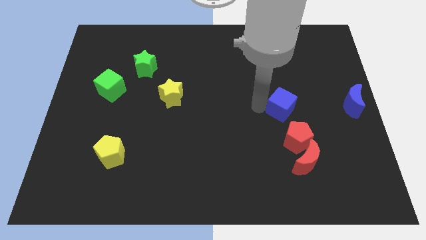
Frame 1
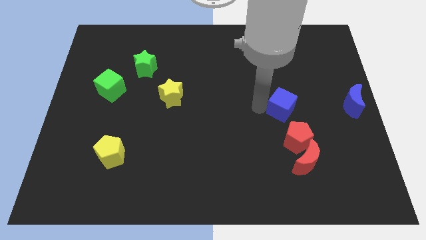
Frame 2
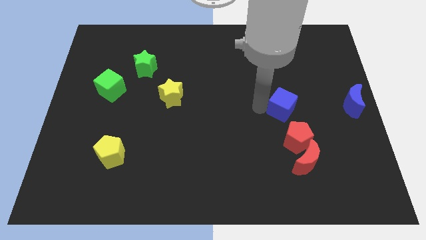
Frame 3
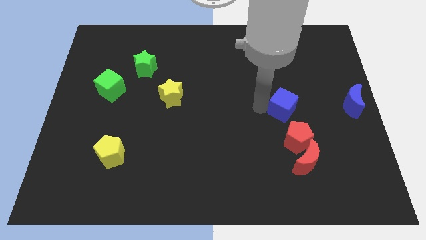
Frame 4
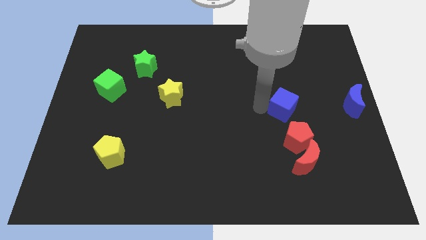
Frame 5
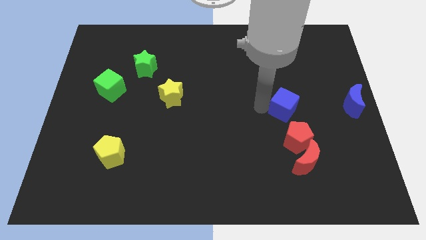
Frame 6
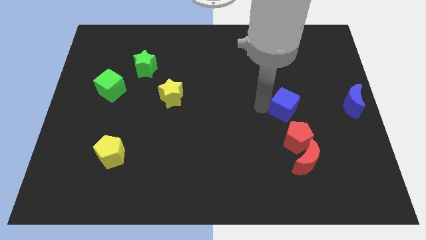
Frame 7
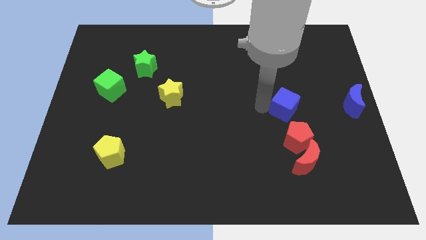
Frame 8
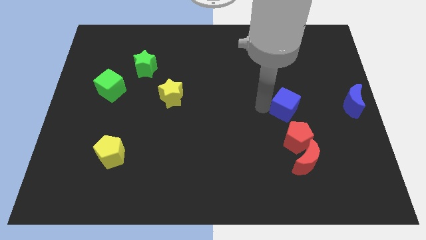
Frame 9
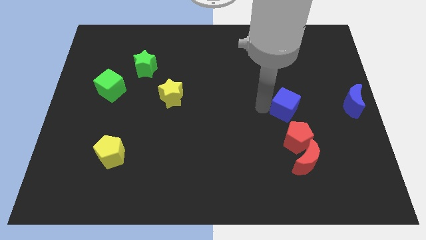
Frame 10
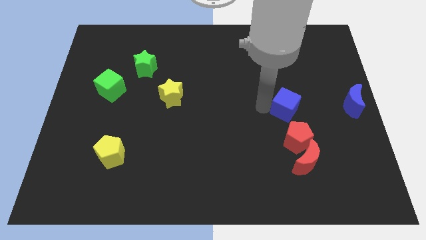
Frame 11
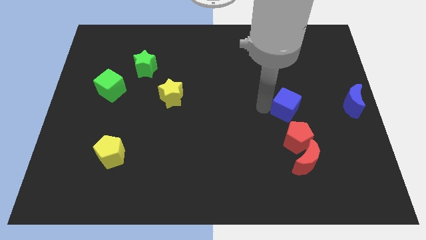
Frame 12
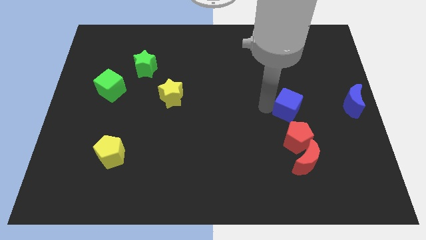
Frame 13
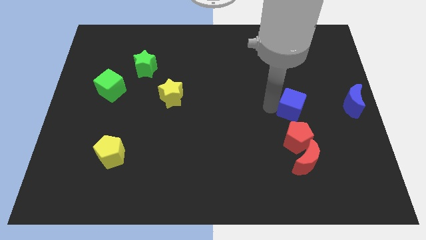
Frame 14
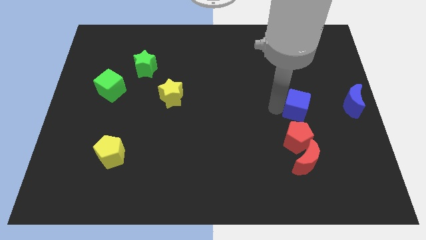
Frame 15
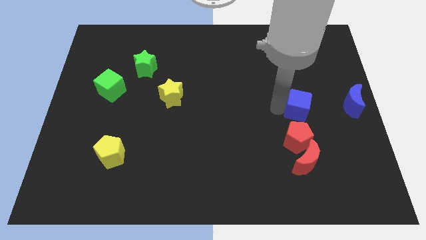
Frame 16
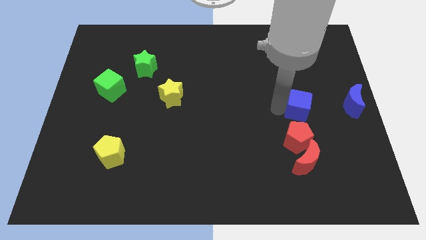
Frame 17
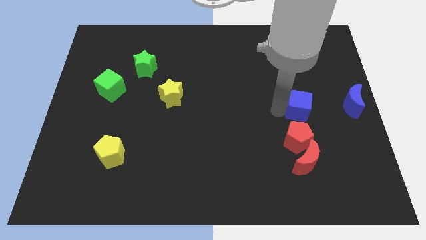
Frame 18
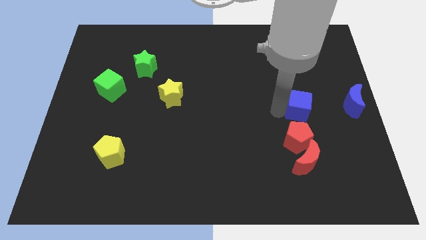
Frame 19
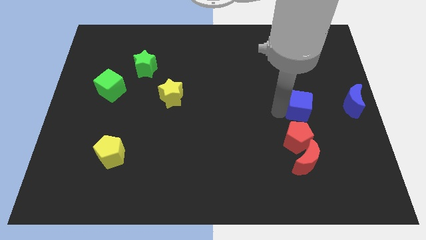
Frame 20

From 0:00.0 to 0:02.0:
place the blue cube on top vertically to the red pentagon

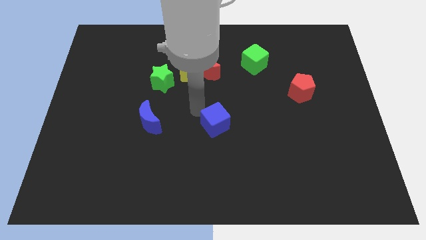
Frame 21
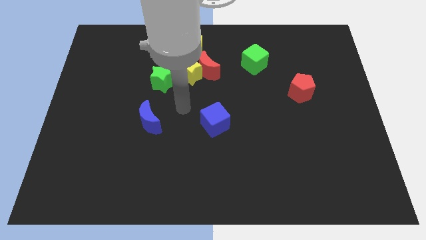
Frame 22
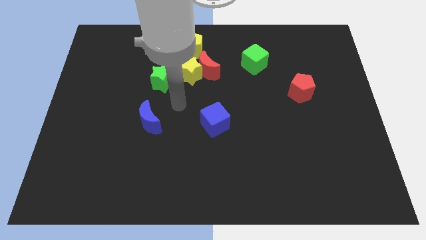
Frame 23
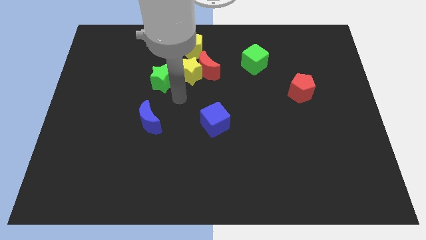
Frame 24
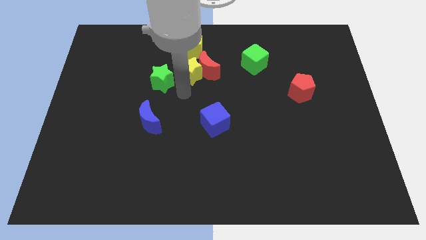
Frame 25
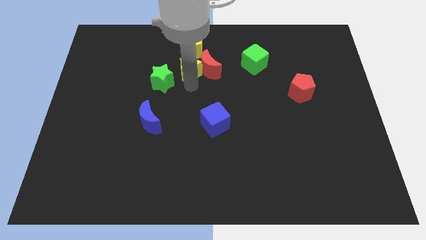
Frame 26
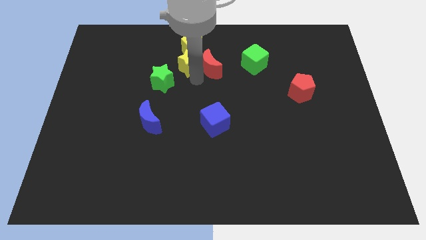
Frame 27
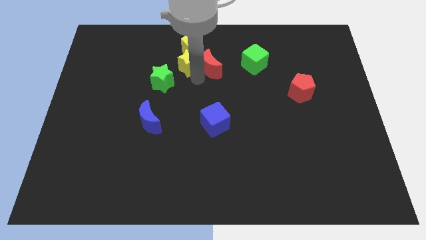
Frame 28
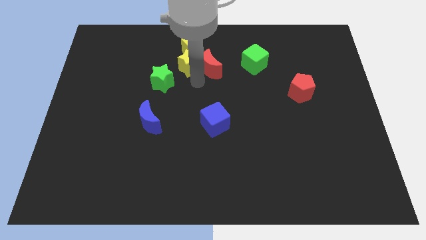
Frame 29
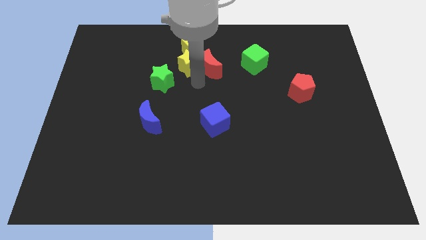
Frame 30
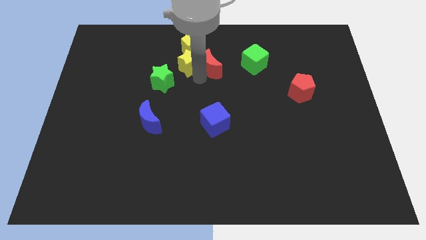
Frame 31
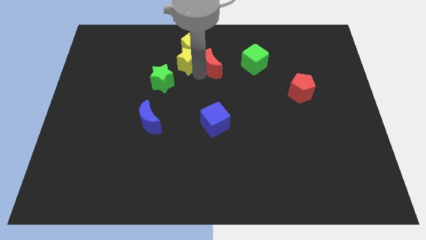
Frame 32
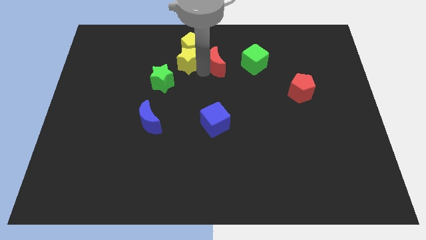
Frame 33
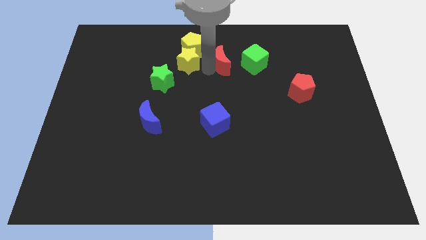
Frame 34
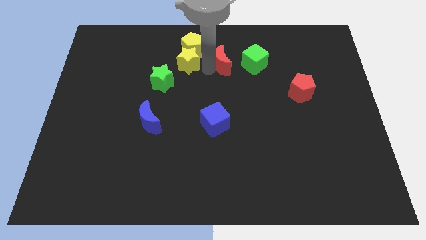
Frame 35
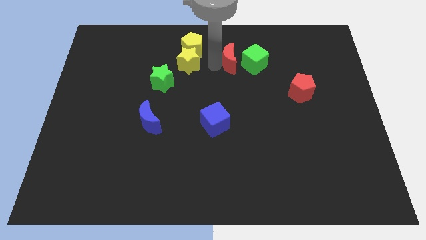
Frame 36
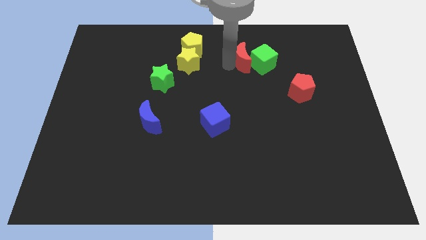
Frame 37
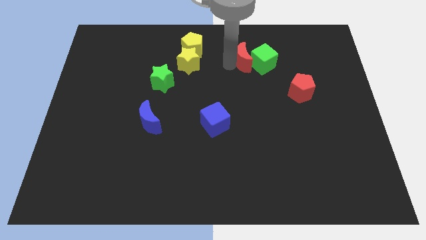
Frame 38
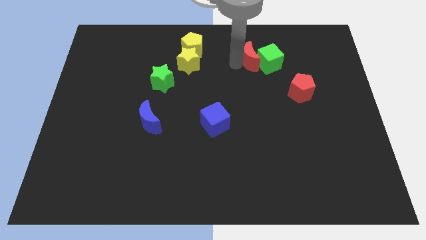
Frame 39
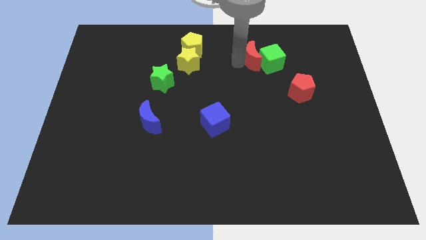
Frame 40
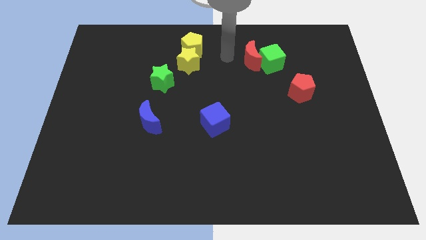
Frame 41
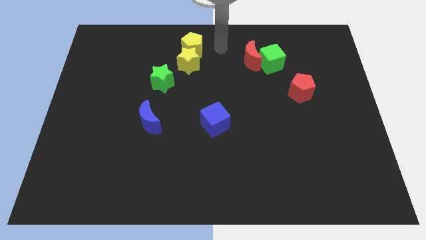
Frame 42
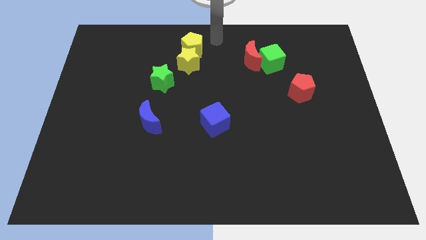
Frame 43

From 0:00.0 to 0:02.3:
push the red crescent into the green cube

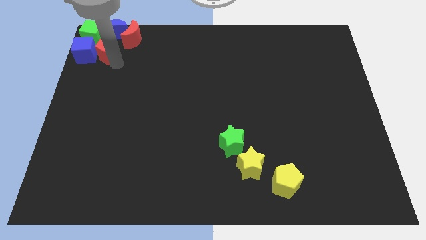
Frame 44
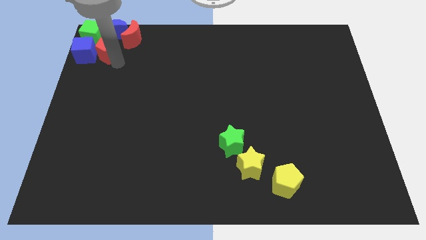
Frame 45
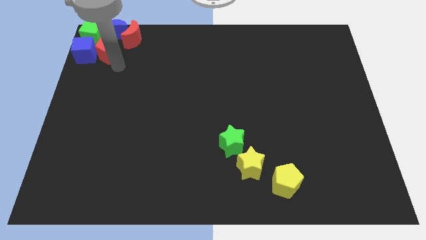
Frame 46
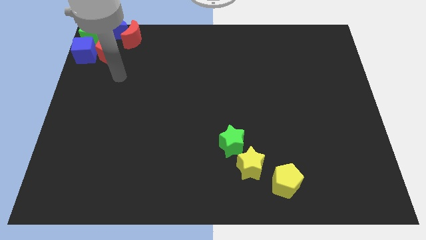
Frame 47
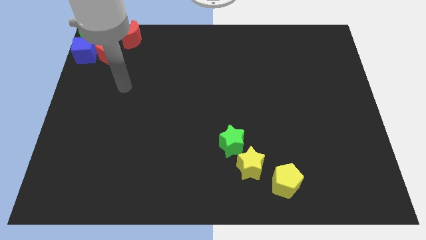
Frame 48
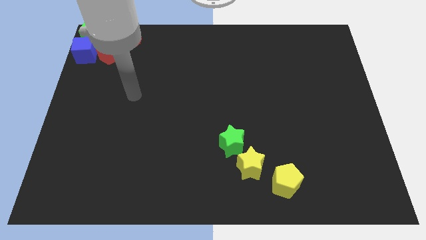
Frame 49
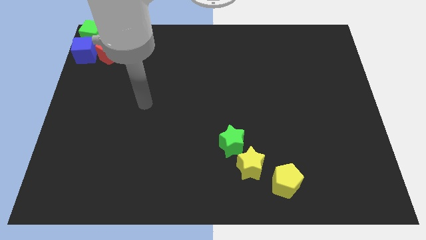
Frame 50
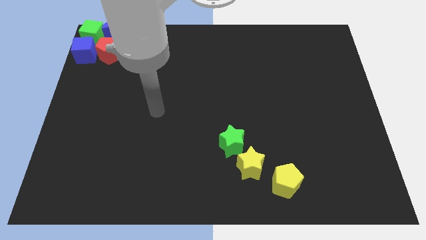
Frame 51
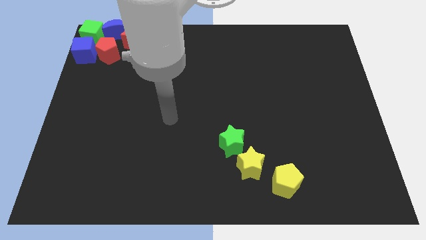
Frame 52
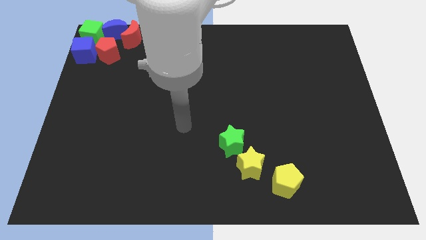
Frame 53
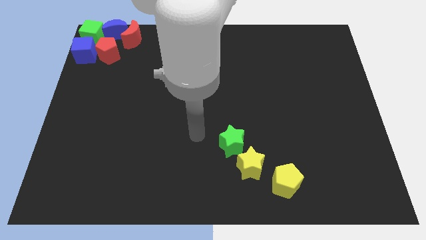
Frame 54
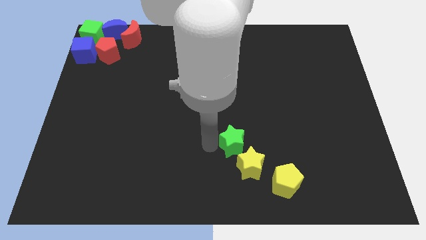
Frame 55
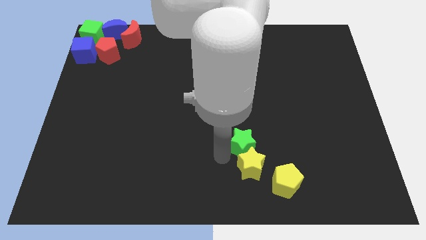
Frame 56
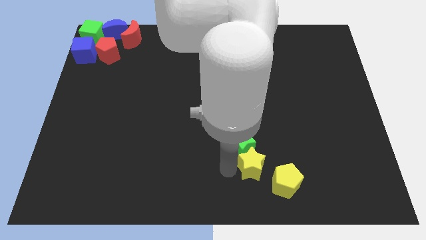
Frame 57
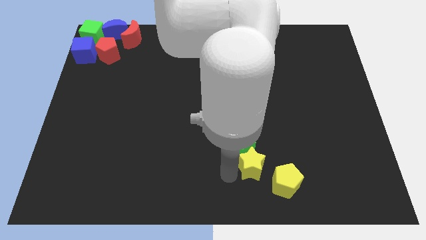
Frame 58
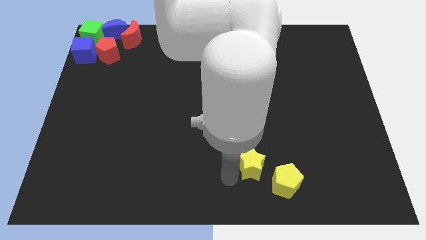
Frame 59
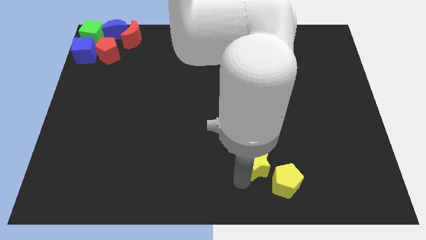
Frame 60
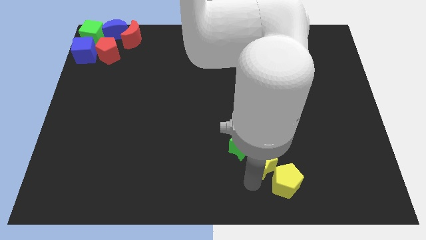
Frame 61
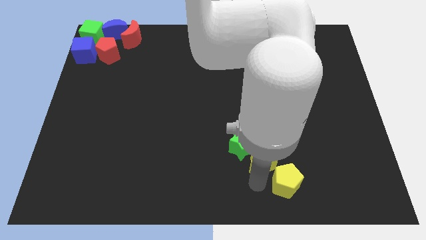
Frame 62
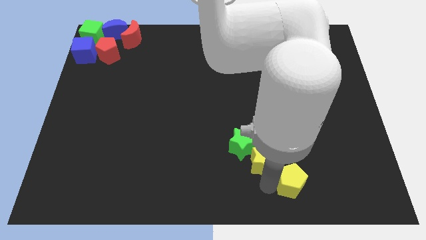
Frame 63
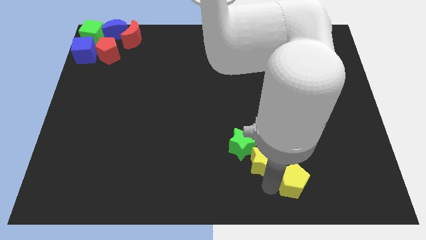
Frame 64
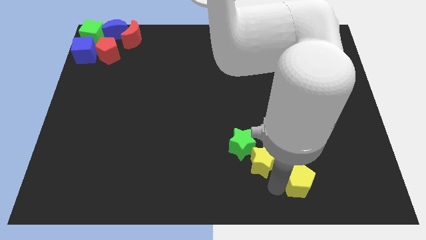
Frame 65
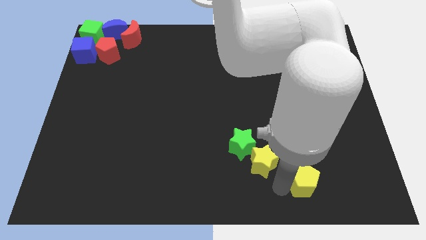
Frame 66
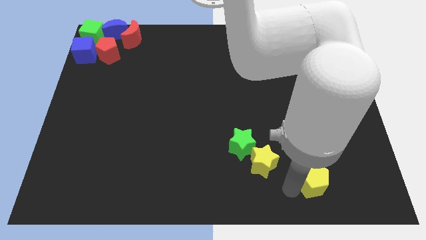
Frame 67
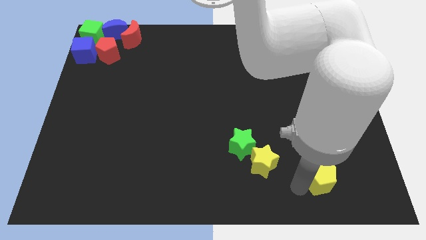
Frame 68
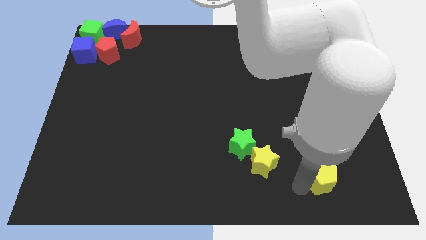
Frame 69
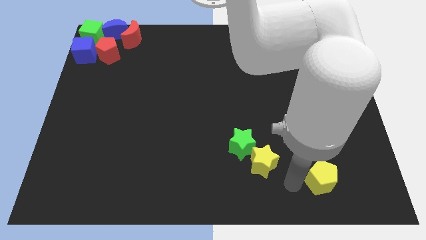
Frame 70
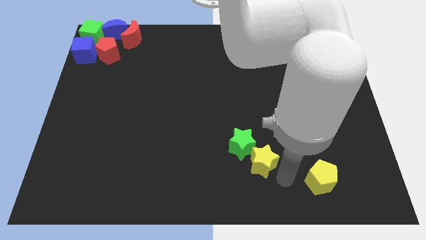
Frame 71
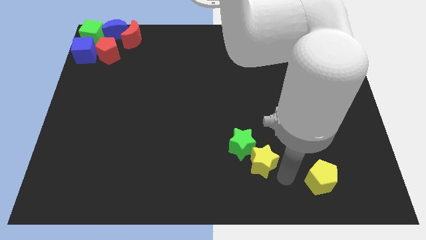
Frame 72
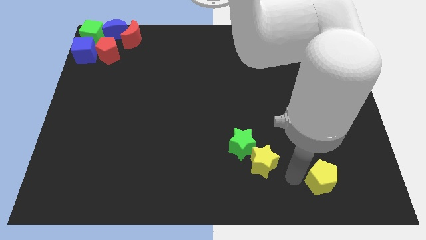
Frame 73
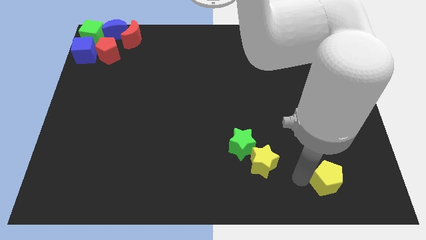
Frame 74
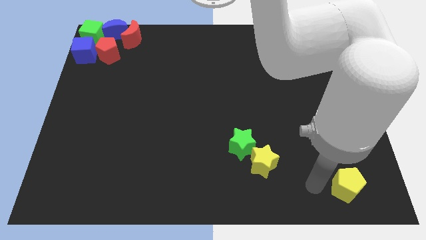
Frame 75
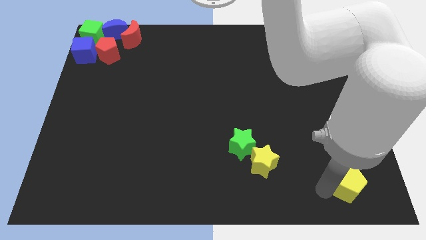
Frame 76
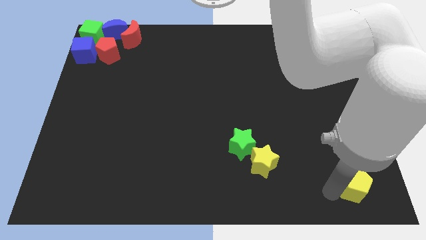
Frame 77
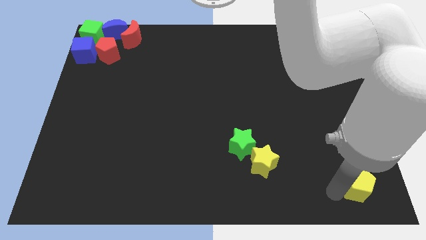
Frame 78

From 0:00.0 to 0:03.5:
slide the yellow pentagon to the bottom right side of the table

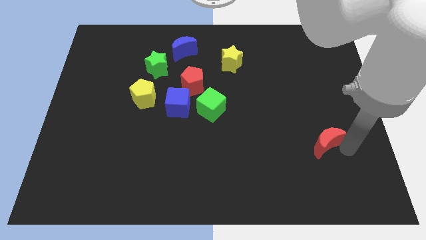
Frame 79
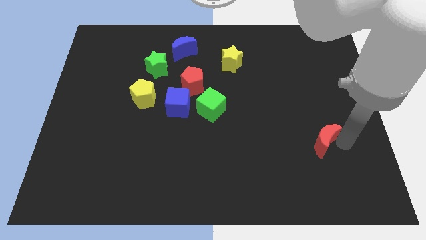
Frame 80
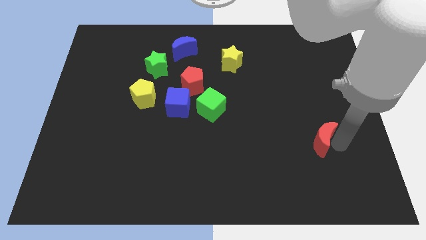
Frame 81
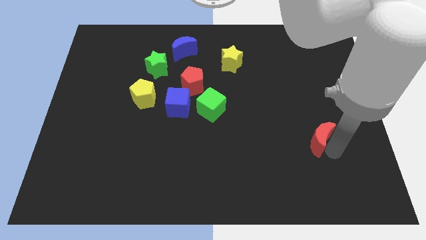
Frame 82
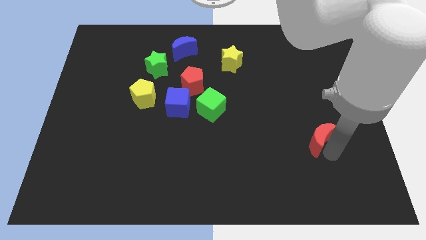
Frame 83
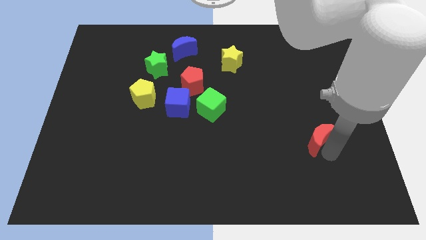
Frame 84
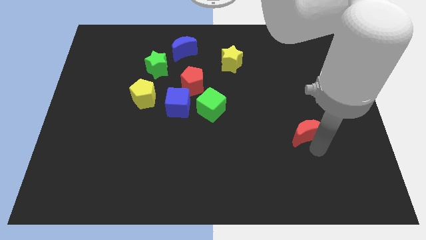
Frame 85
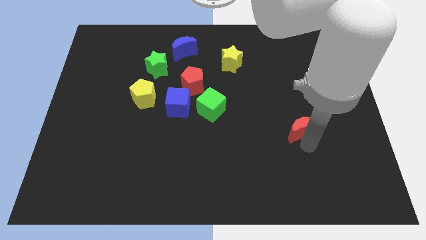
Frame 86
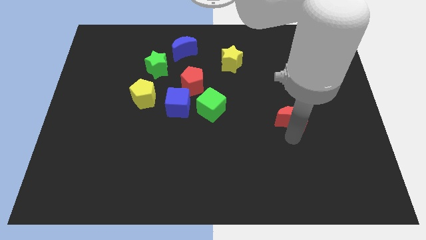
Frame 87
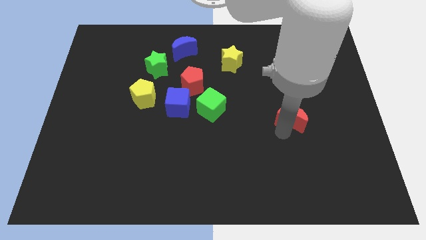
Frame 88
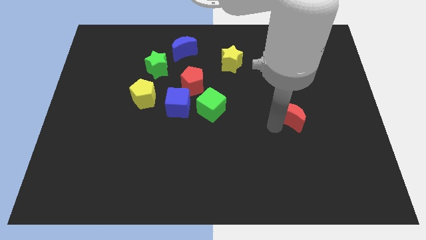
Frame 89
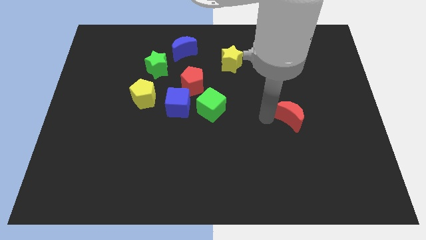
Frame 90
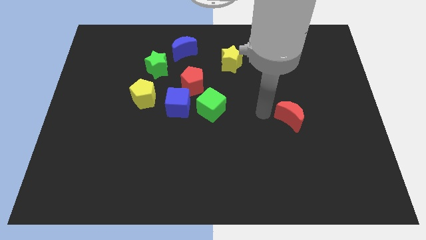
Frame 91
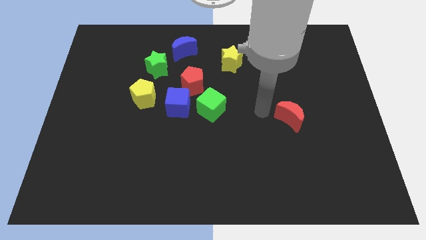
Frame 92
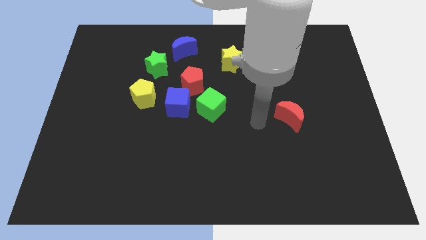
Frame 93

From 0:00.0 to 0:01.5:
place the red moon right to the green cube
